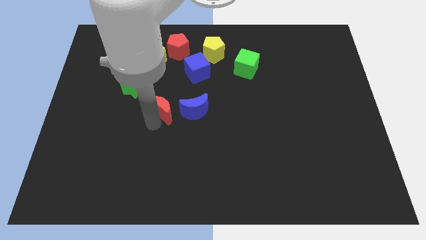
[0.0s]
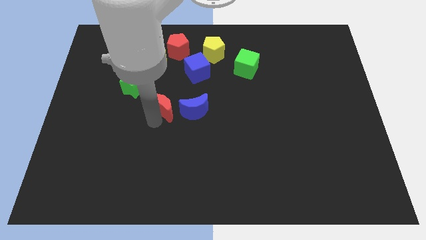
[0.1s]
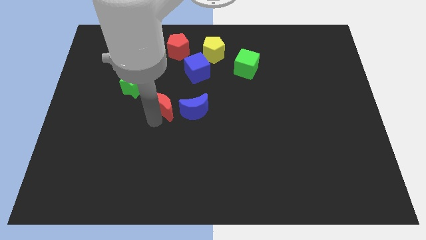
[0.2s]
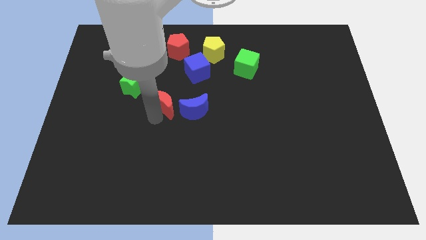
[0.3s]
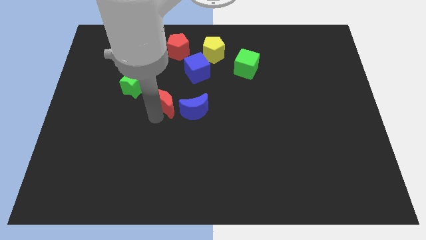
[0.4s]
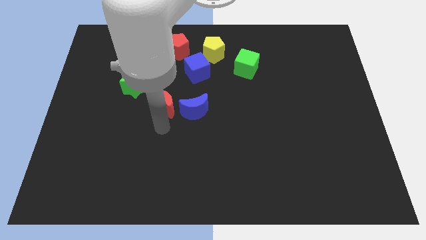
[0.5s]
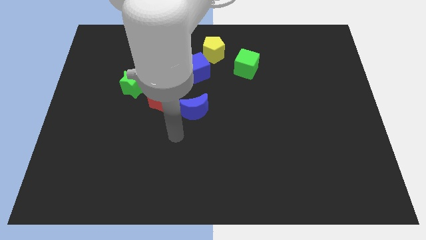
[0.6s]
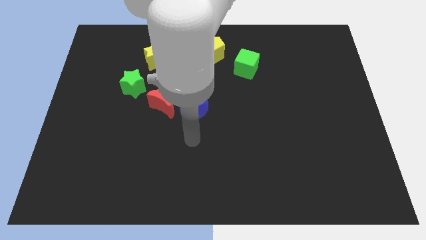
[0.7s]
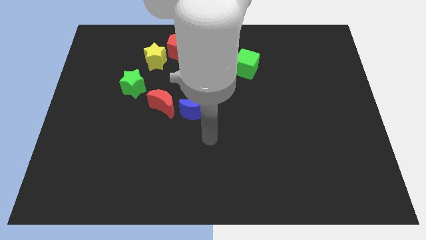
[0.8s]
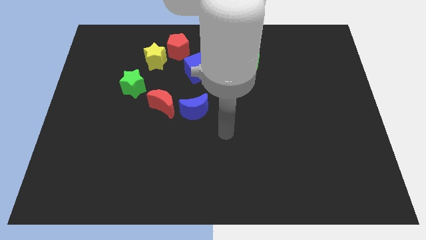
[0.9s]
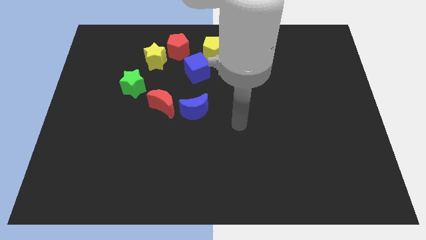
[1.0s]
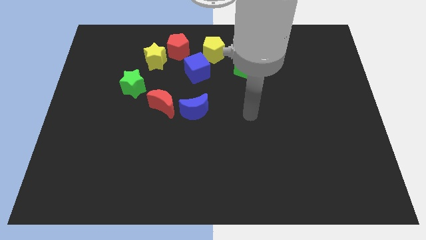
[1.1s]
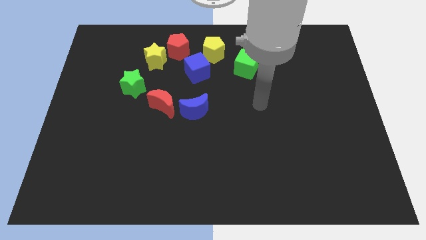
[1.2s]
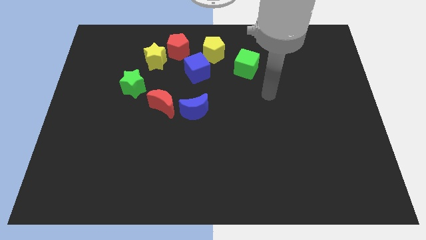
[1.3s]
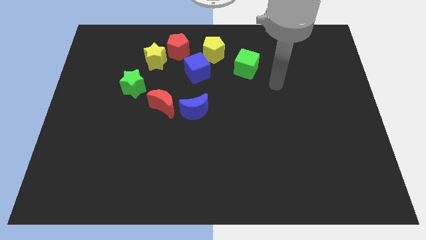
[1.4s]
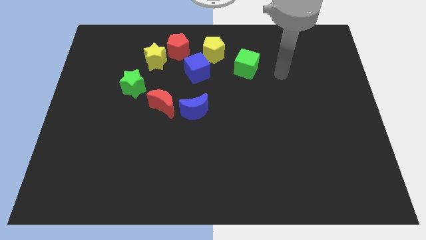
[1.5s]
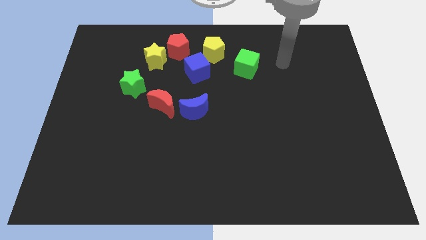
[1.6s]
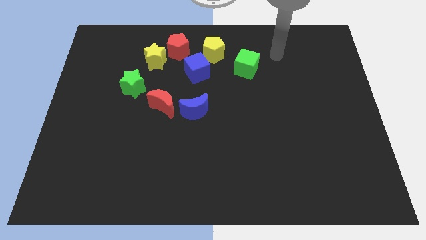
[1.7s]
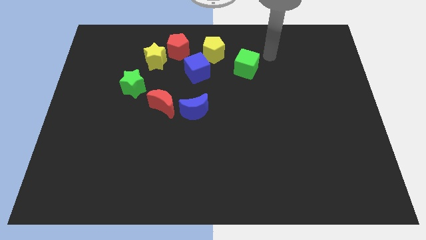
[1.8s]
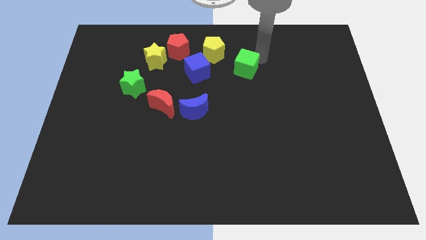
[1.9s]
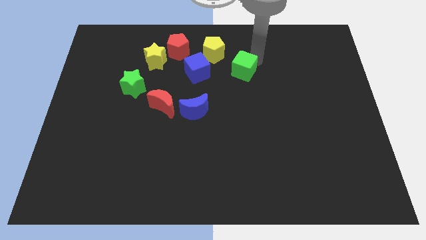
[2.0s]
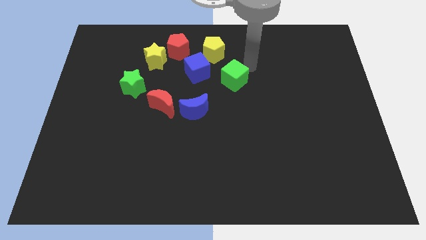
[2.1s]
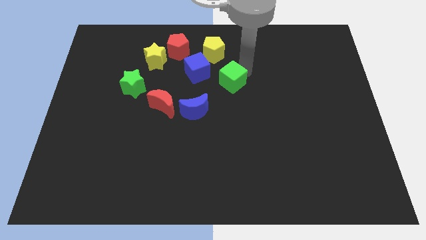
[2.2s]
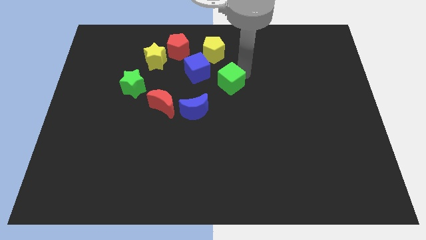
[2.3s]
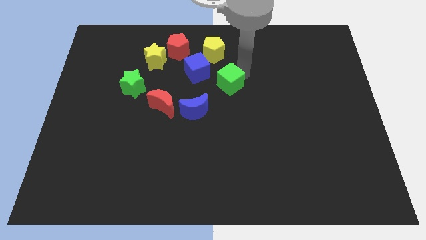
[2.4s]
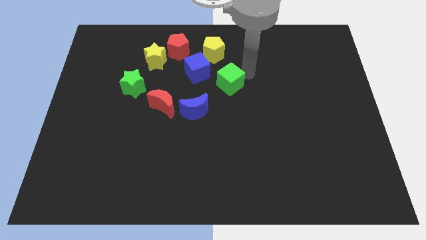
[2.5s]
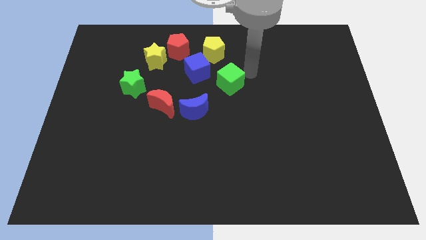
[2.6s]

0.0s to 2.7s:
move the green cube to the bottom right of the blue cube

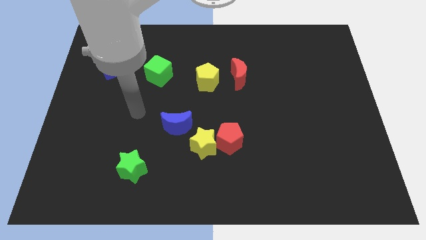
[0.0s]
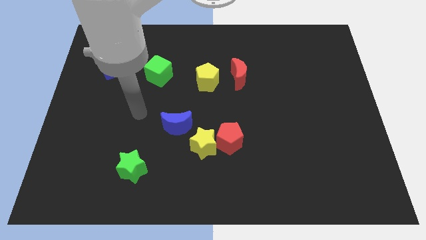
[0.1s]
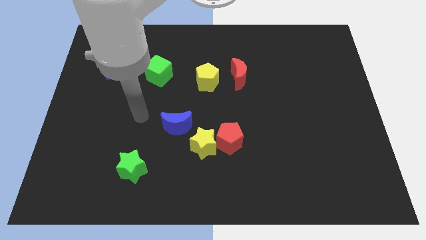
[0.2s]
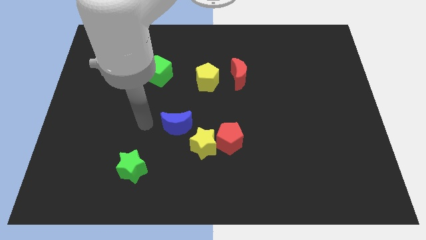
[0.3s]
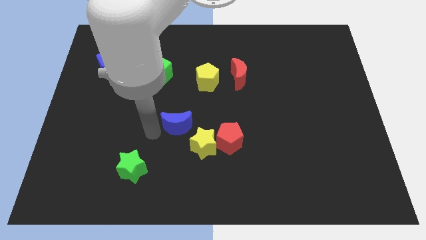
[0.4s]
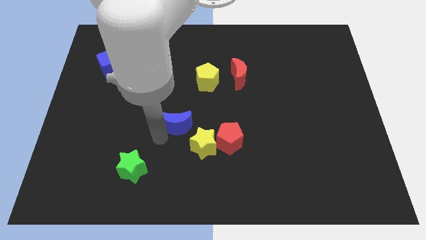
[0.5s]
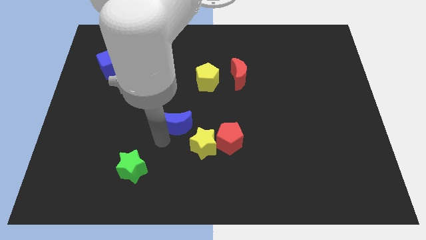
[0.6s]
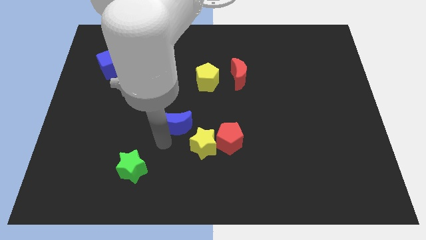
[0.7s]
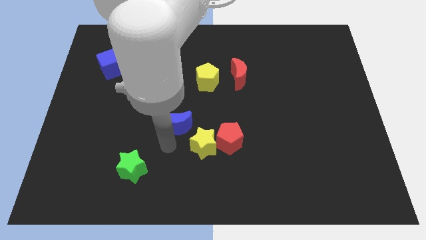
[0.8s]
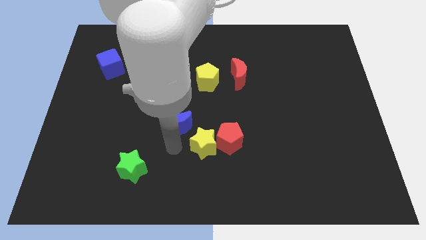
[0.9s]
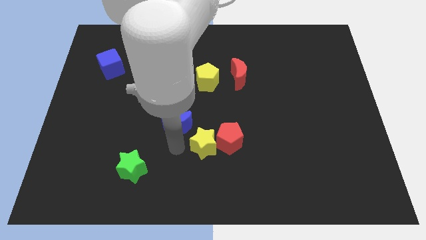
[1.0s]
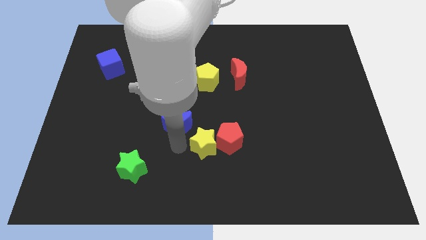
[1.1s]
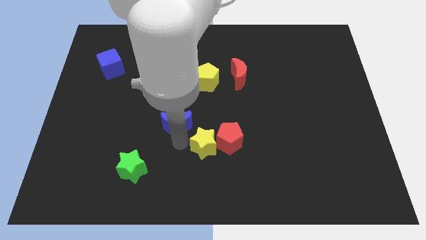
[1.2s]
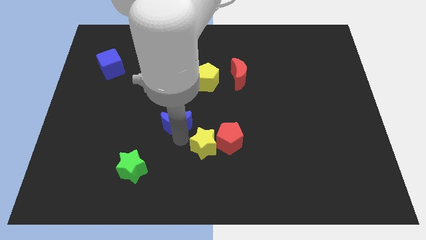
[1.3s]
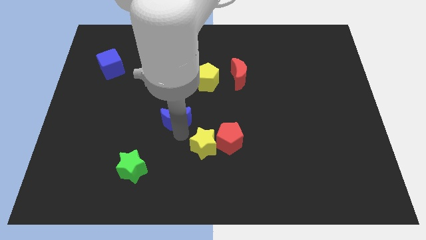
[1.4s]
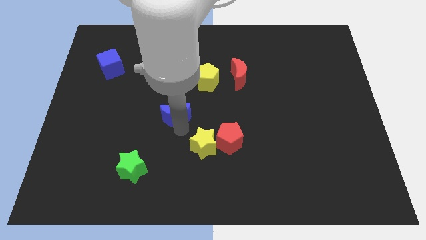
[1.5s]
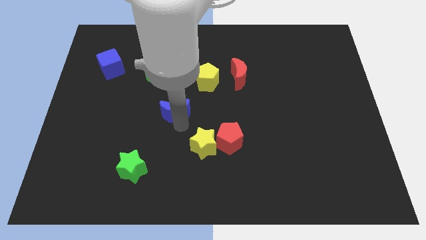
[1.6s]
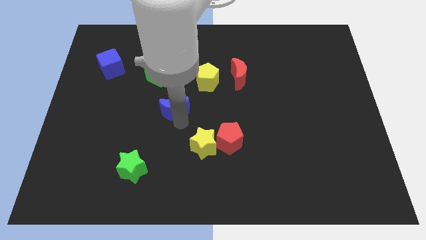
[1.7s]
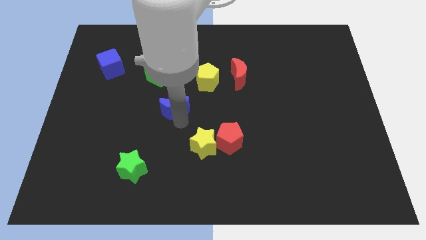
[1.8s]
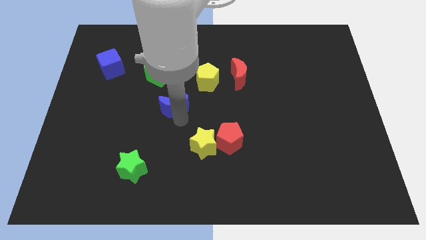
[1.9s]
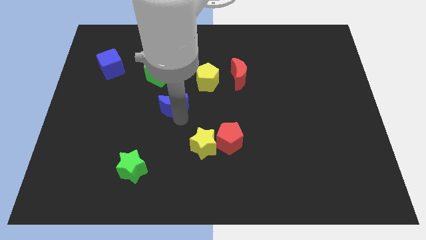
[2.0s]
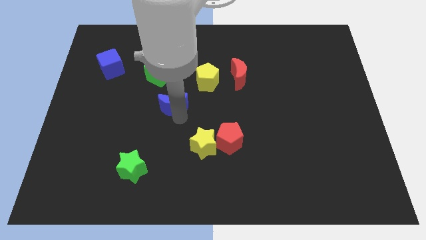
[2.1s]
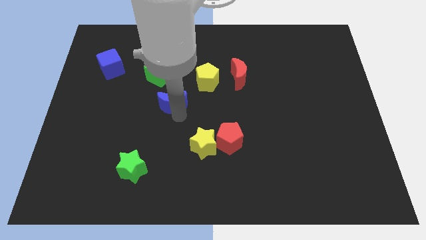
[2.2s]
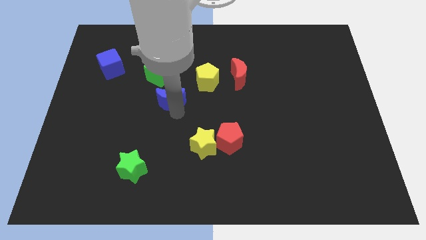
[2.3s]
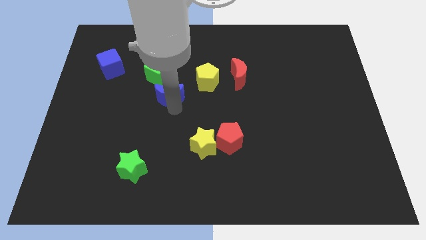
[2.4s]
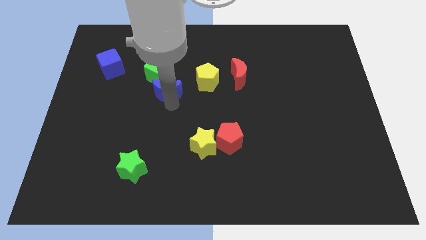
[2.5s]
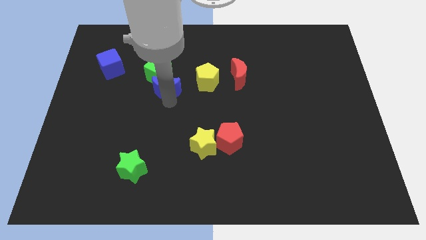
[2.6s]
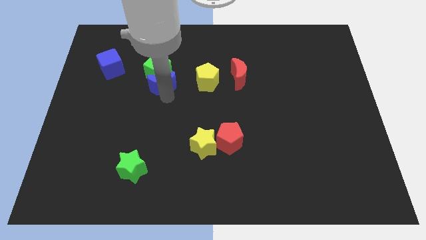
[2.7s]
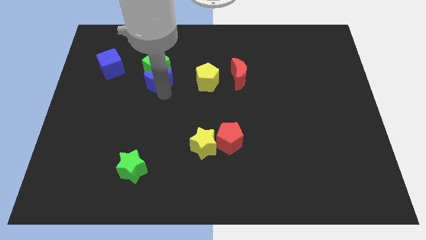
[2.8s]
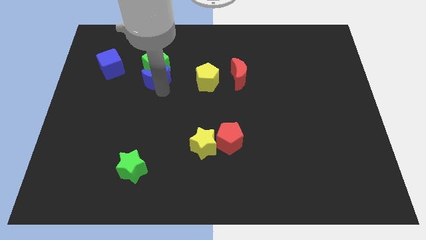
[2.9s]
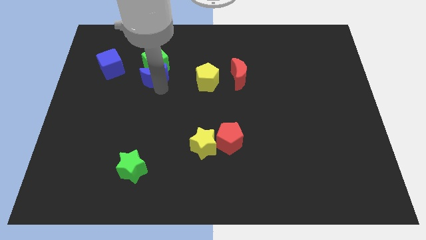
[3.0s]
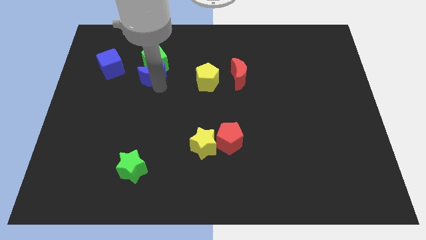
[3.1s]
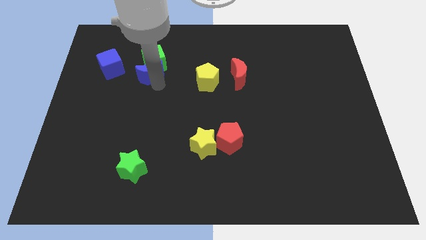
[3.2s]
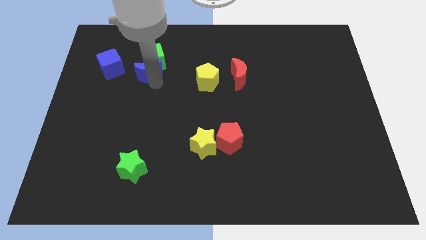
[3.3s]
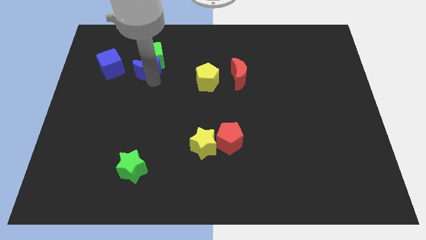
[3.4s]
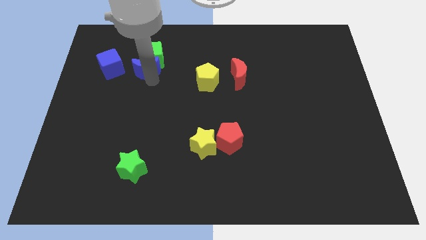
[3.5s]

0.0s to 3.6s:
push the blue moon into the green cube

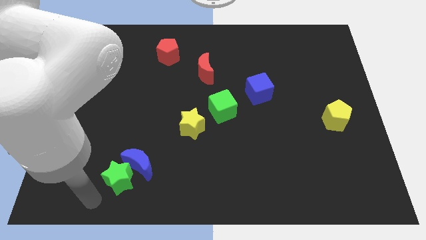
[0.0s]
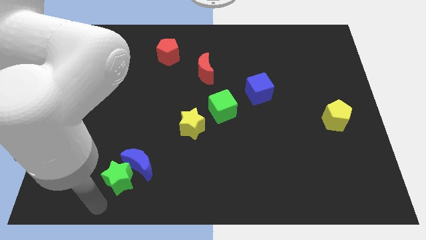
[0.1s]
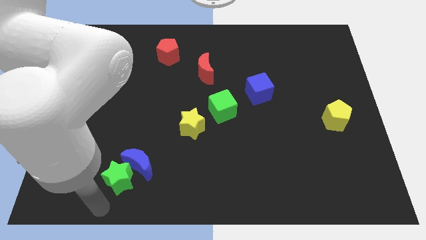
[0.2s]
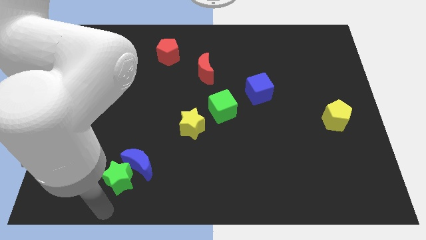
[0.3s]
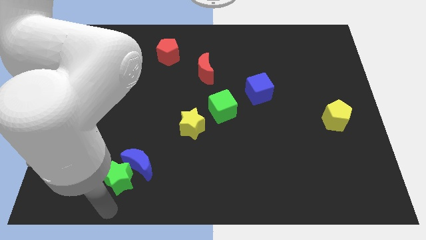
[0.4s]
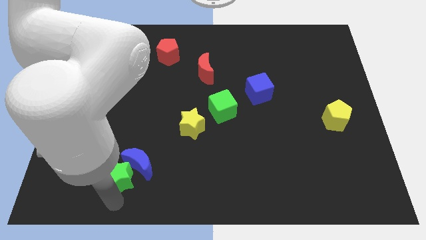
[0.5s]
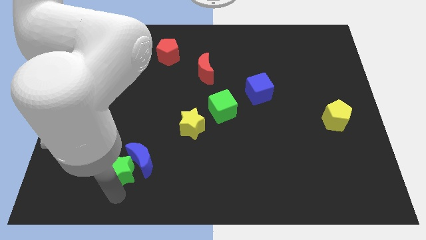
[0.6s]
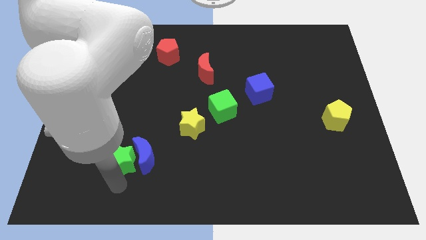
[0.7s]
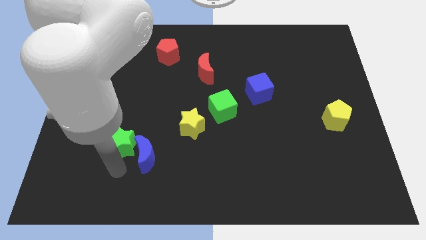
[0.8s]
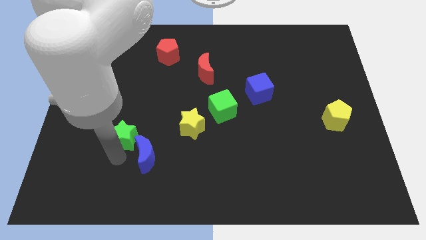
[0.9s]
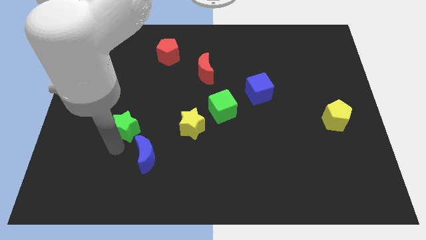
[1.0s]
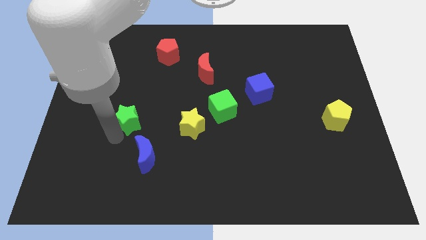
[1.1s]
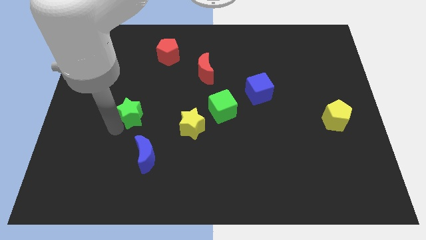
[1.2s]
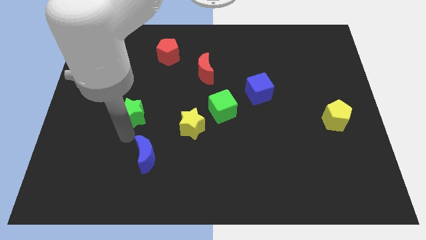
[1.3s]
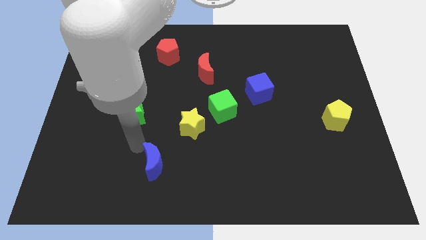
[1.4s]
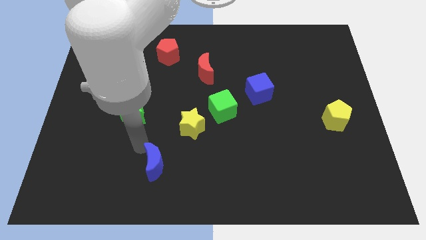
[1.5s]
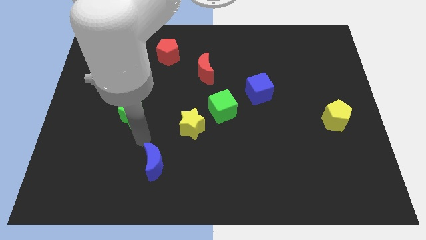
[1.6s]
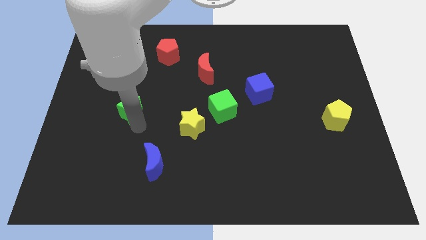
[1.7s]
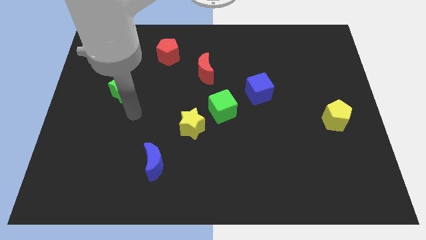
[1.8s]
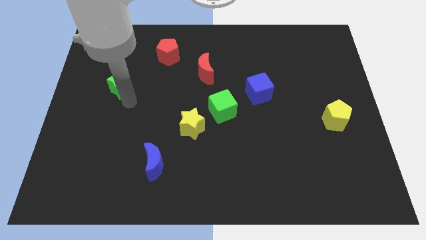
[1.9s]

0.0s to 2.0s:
push green star slightly upwards

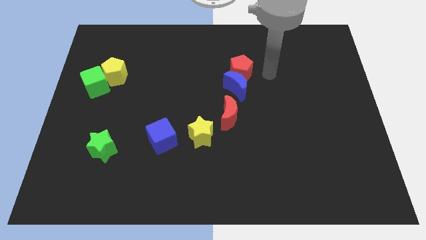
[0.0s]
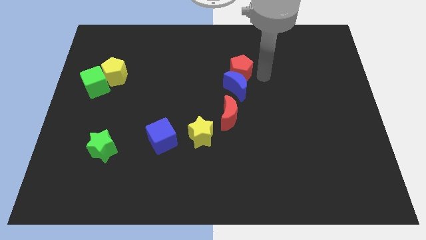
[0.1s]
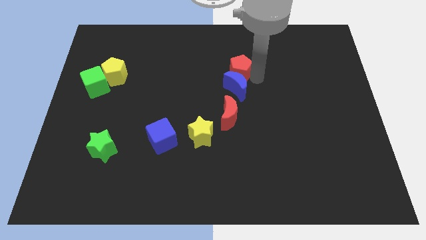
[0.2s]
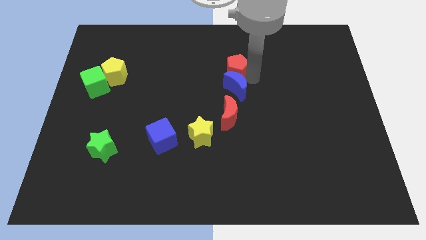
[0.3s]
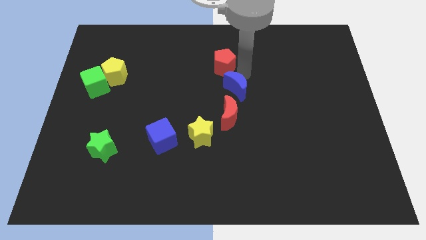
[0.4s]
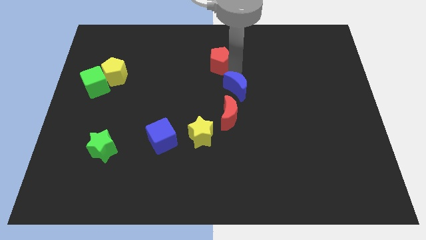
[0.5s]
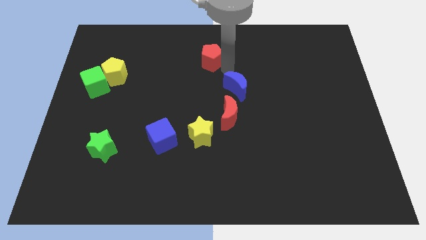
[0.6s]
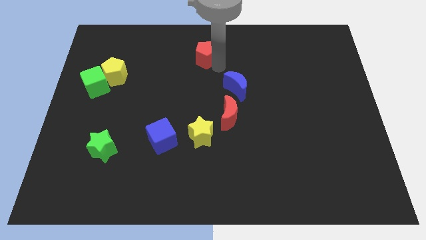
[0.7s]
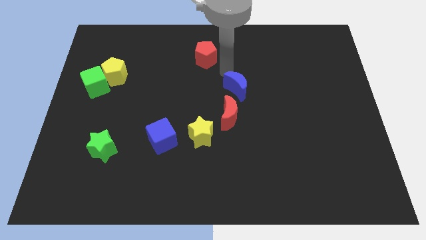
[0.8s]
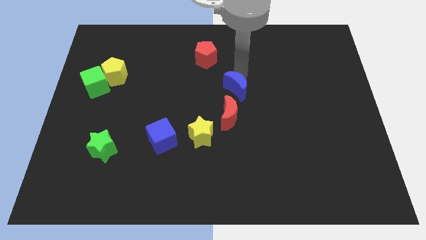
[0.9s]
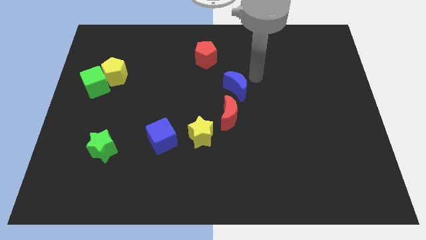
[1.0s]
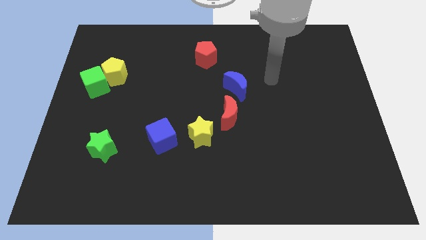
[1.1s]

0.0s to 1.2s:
place the red pentagon diagonally to green star
